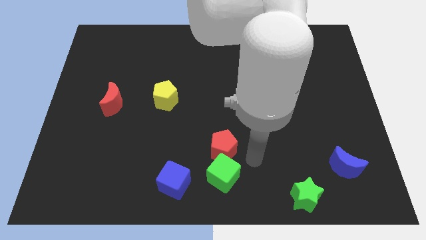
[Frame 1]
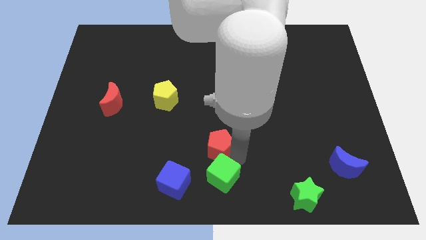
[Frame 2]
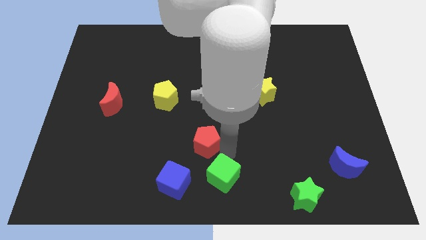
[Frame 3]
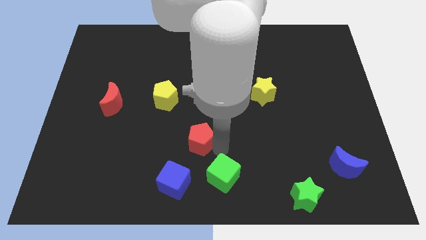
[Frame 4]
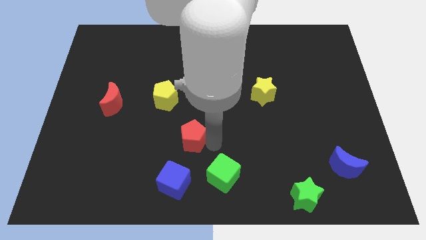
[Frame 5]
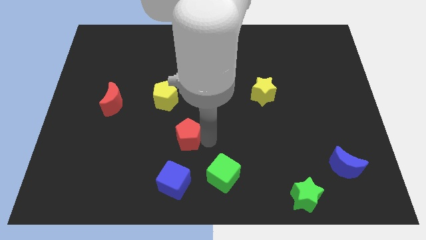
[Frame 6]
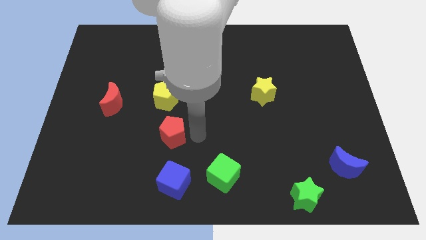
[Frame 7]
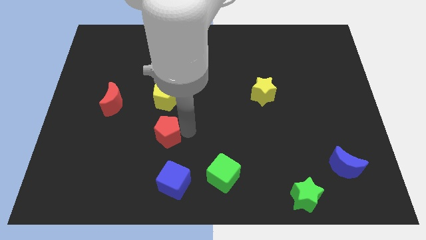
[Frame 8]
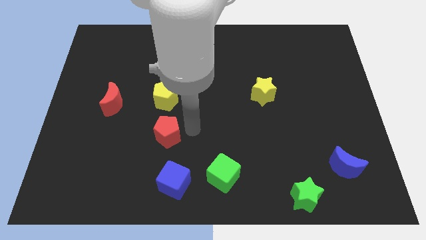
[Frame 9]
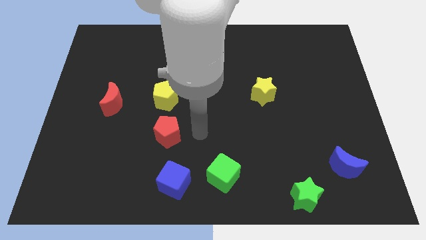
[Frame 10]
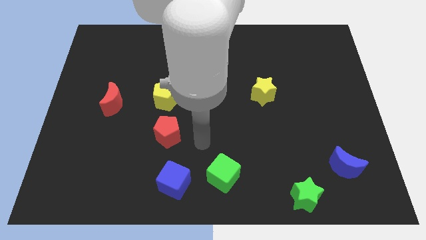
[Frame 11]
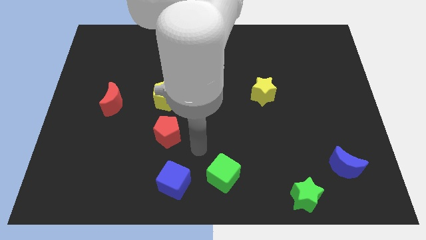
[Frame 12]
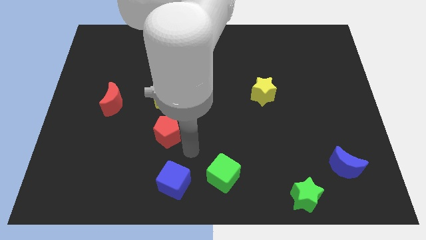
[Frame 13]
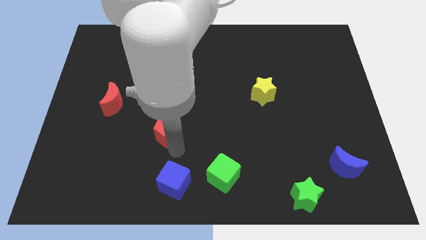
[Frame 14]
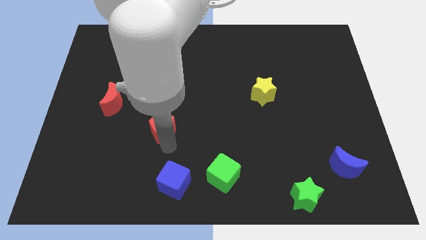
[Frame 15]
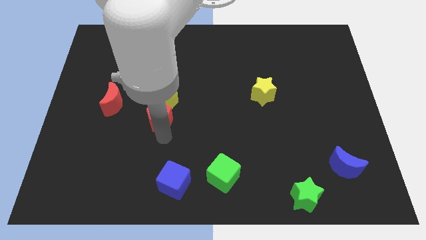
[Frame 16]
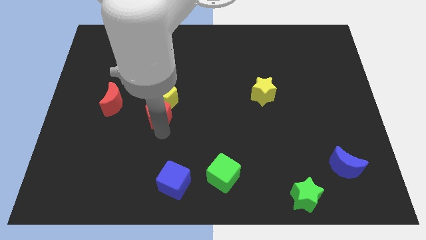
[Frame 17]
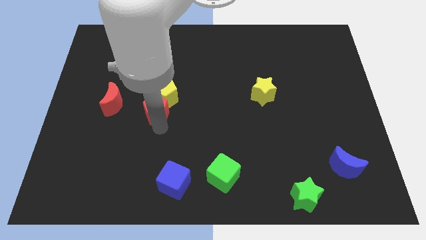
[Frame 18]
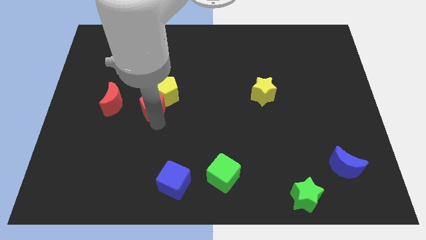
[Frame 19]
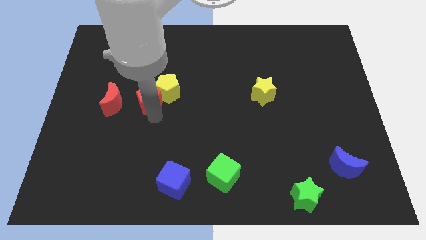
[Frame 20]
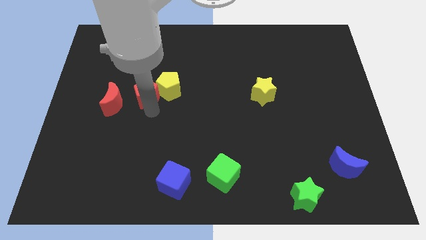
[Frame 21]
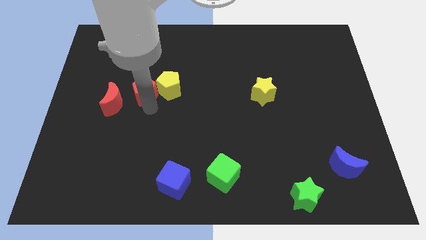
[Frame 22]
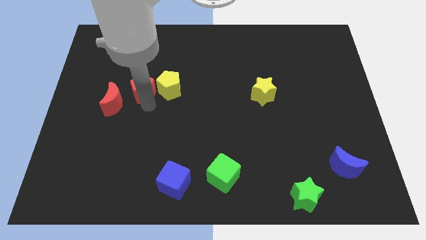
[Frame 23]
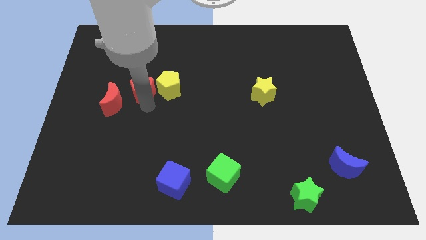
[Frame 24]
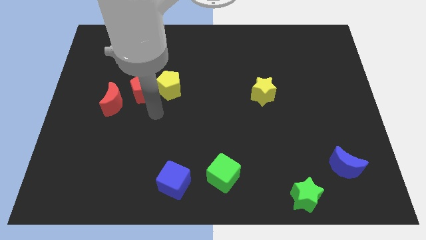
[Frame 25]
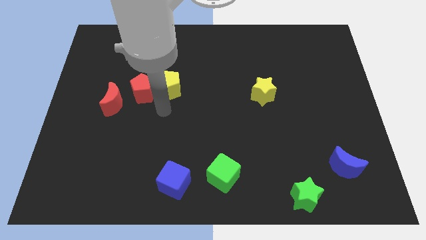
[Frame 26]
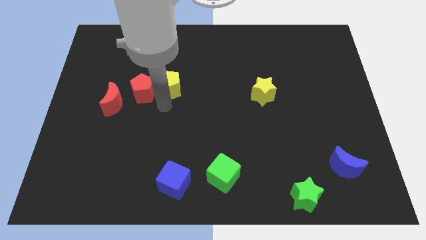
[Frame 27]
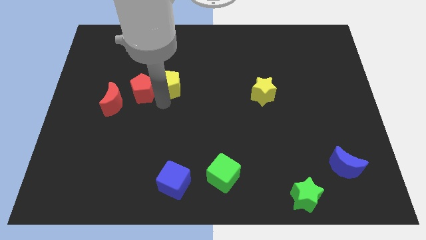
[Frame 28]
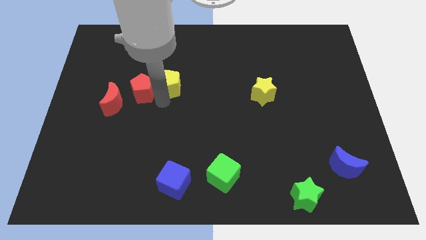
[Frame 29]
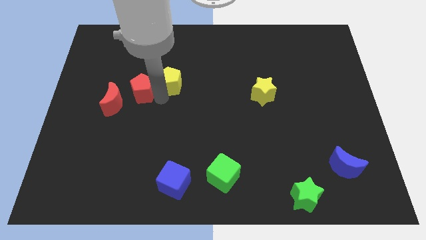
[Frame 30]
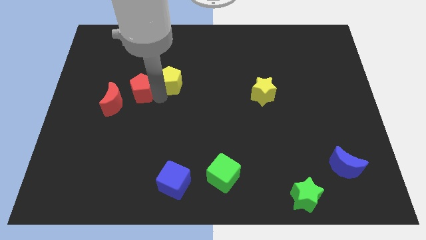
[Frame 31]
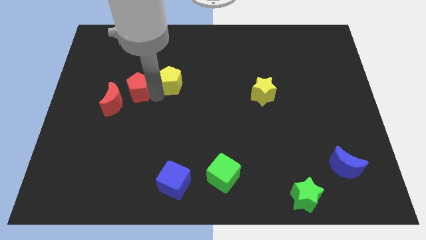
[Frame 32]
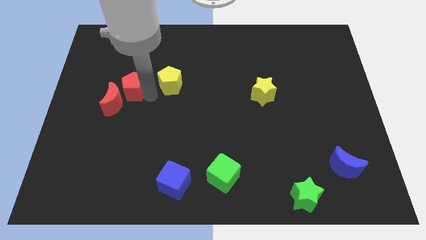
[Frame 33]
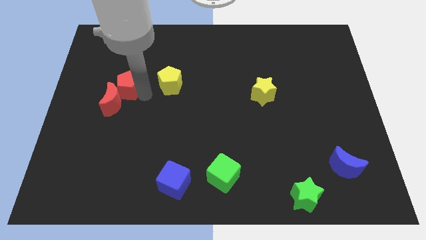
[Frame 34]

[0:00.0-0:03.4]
move the red pentagon into the red crescent

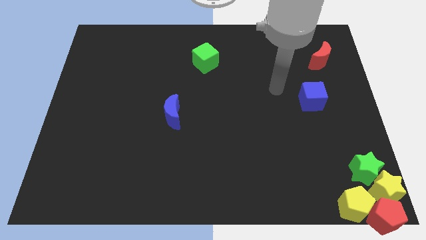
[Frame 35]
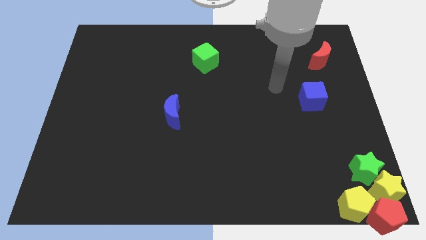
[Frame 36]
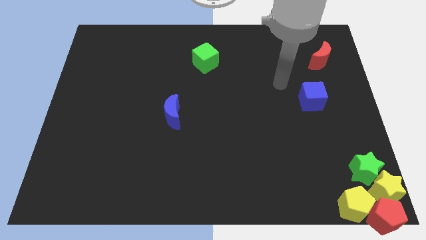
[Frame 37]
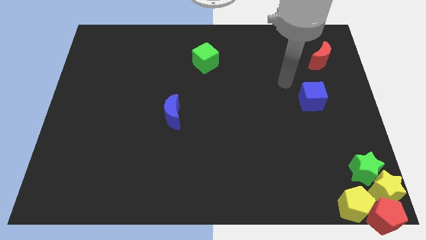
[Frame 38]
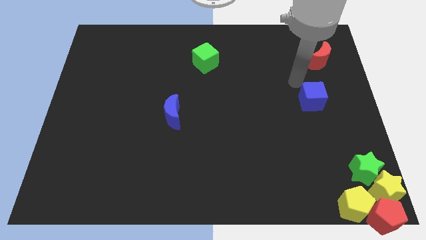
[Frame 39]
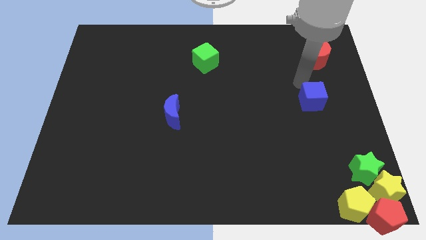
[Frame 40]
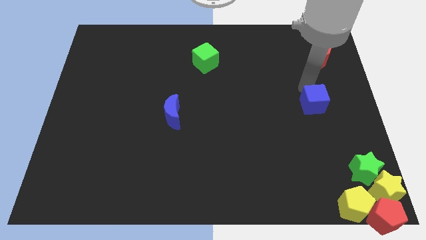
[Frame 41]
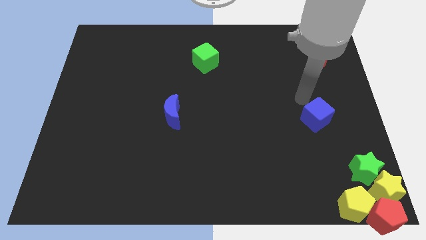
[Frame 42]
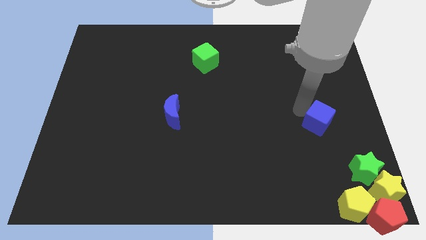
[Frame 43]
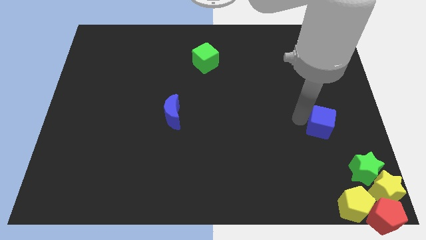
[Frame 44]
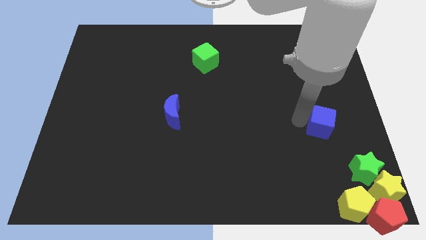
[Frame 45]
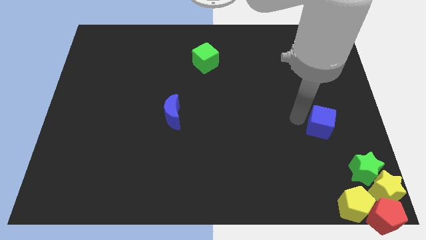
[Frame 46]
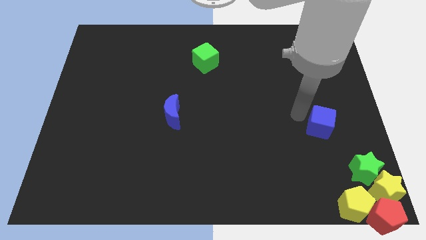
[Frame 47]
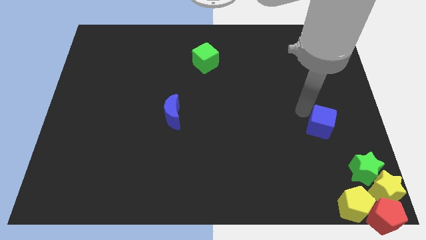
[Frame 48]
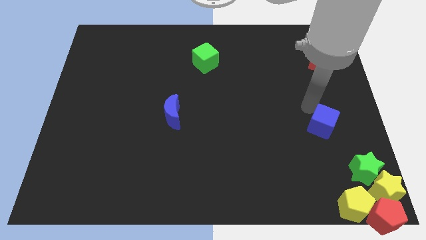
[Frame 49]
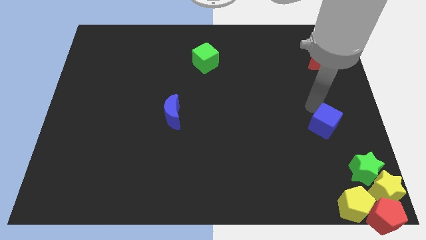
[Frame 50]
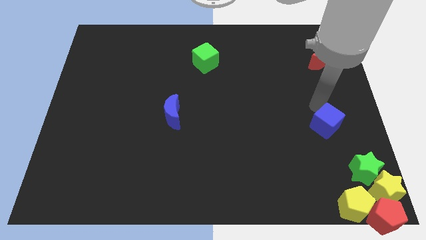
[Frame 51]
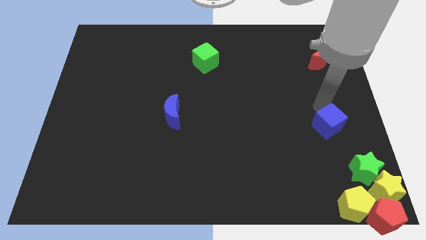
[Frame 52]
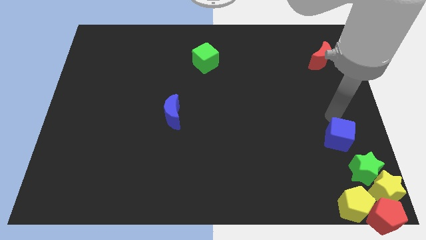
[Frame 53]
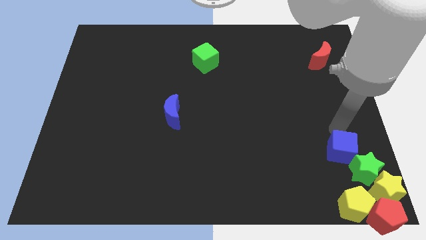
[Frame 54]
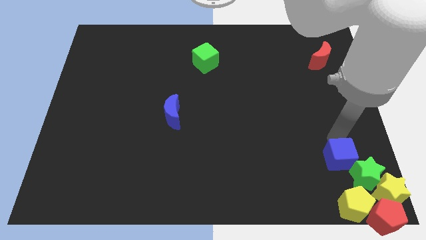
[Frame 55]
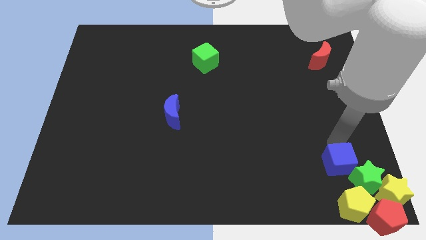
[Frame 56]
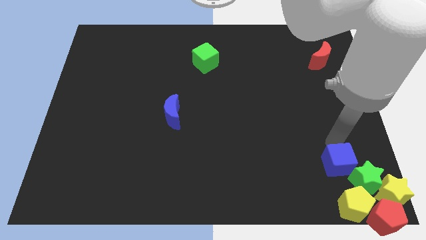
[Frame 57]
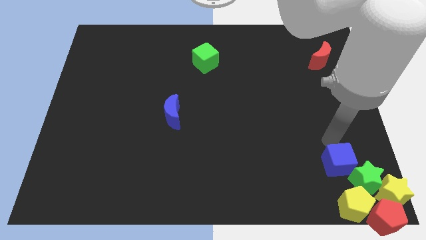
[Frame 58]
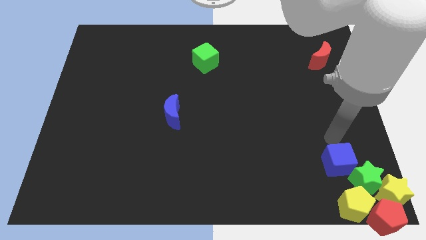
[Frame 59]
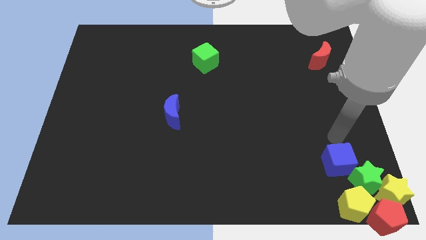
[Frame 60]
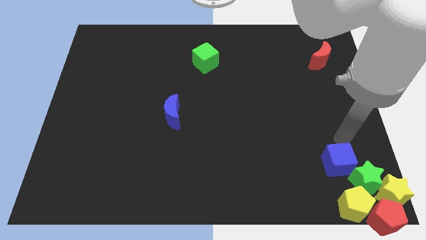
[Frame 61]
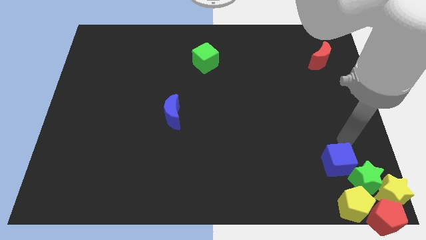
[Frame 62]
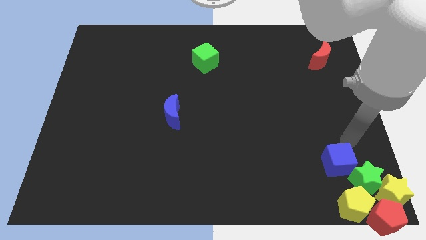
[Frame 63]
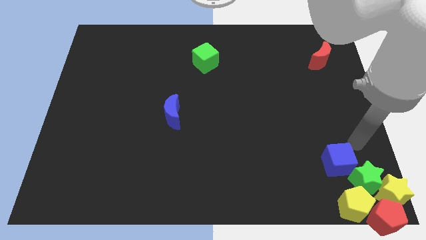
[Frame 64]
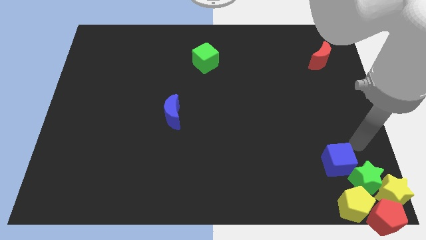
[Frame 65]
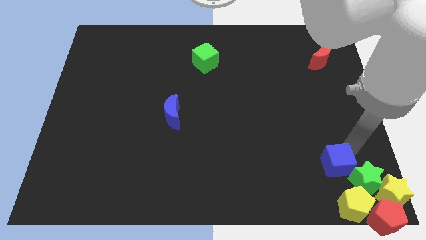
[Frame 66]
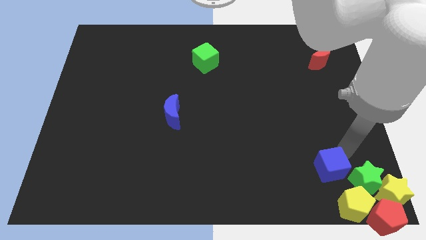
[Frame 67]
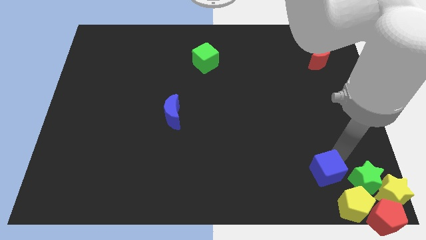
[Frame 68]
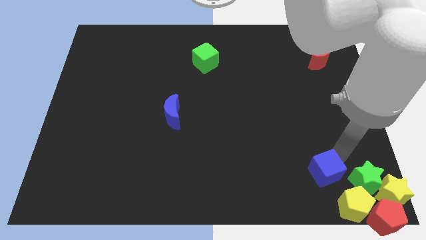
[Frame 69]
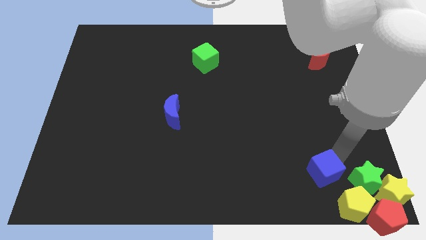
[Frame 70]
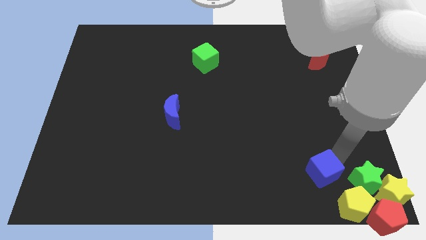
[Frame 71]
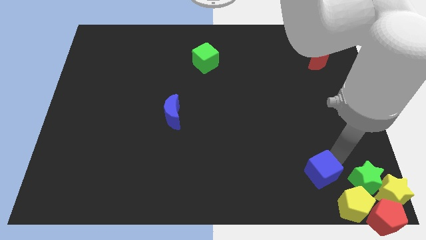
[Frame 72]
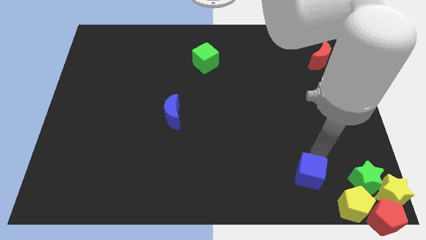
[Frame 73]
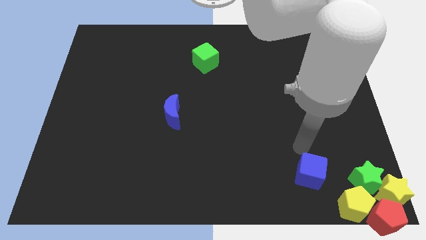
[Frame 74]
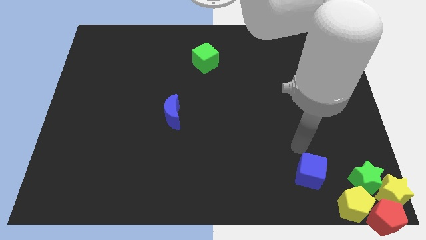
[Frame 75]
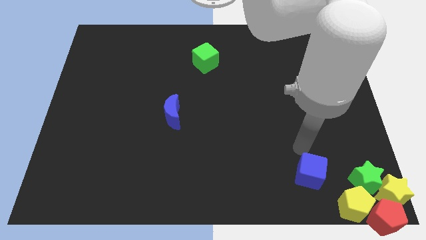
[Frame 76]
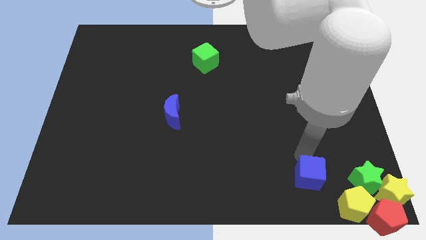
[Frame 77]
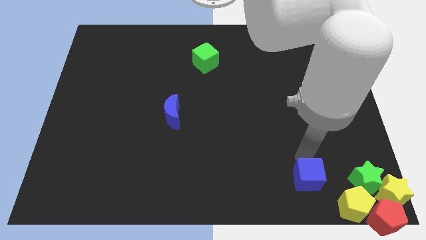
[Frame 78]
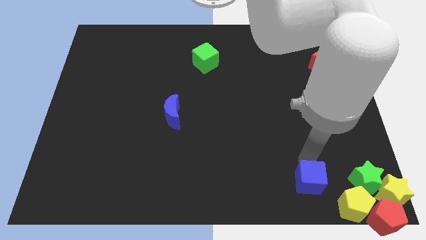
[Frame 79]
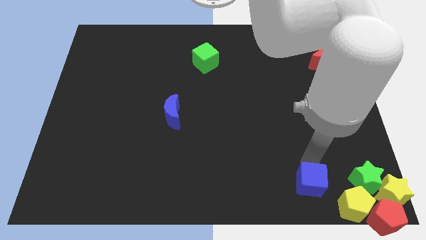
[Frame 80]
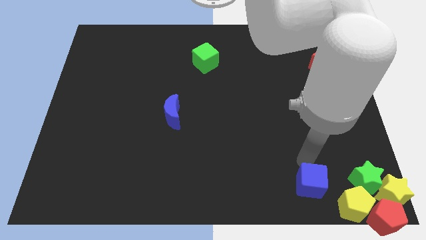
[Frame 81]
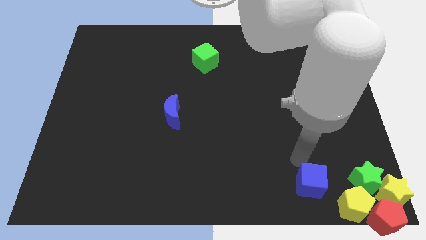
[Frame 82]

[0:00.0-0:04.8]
place the blue cube left to the green star

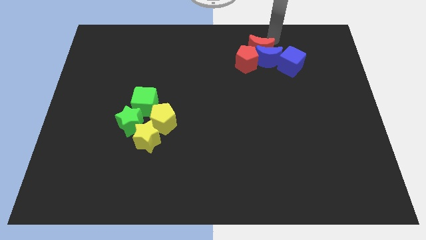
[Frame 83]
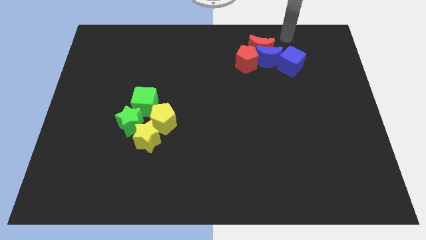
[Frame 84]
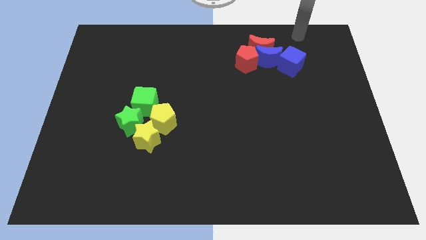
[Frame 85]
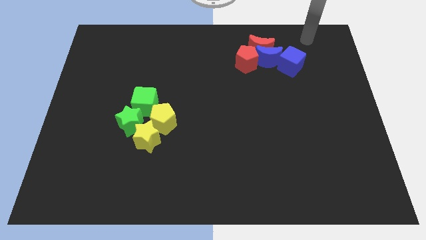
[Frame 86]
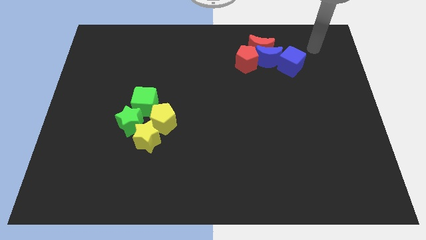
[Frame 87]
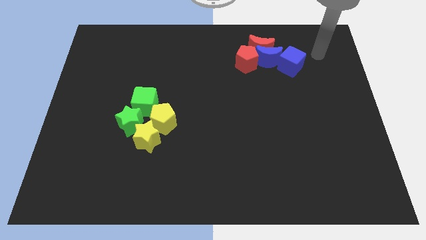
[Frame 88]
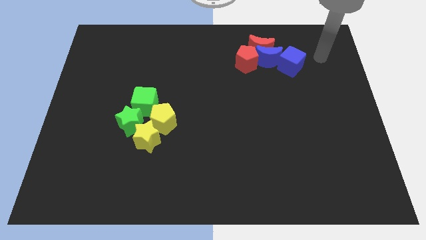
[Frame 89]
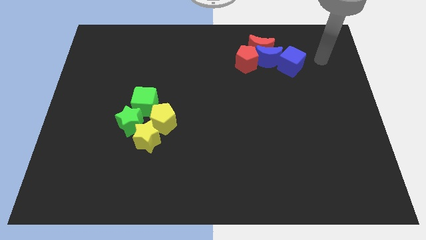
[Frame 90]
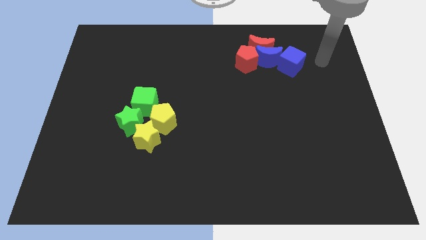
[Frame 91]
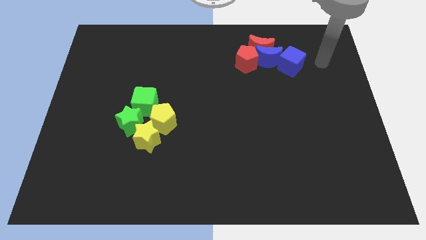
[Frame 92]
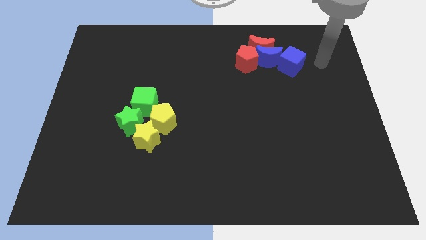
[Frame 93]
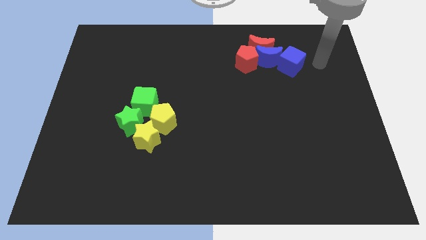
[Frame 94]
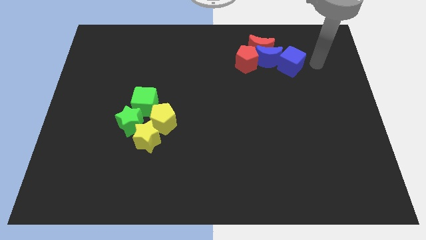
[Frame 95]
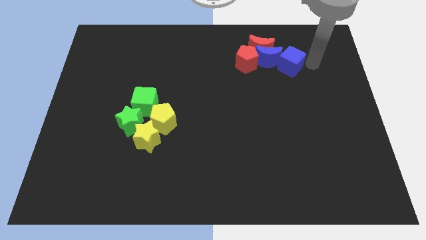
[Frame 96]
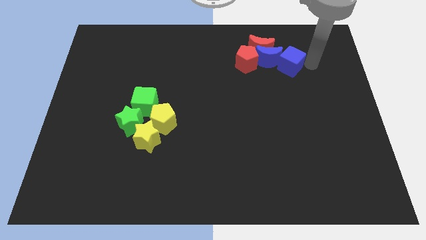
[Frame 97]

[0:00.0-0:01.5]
place your arm to the top right side of the blue cube
